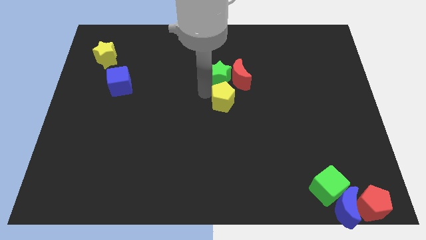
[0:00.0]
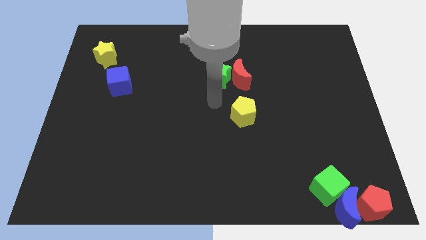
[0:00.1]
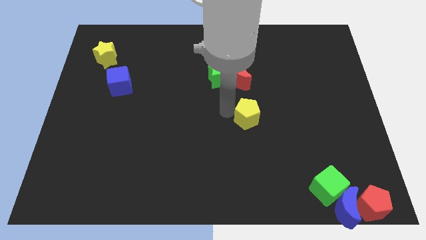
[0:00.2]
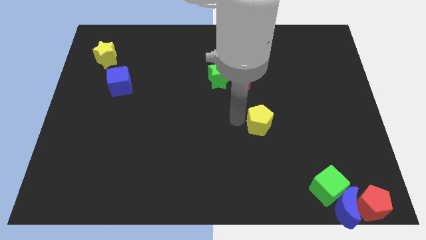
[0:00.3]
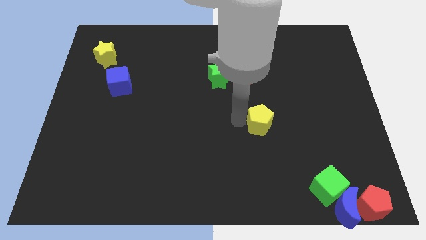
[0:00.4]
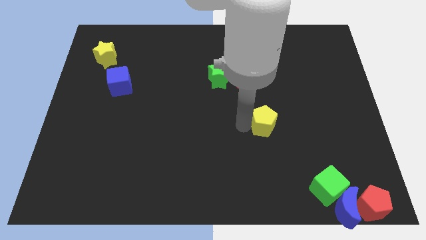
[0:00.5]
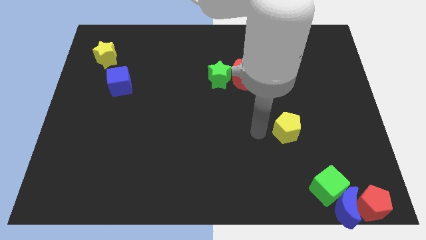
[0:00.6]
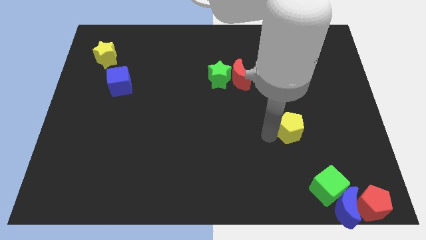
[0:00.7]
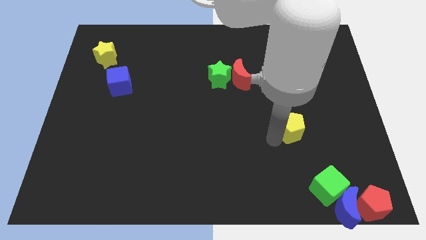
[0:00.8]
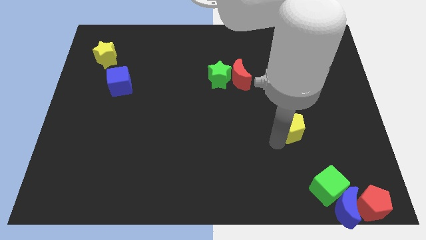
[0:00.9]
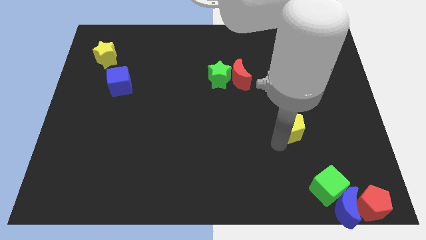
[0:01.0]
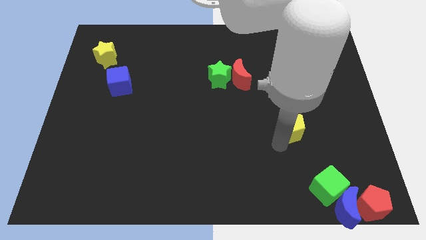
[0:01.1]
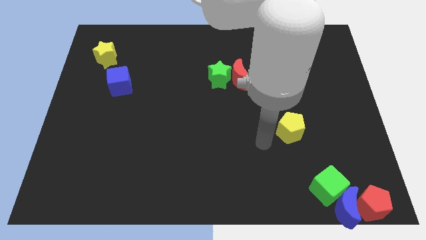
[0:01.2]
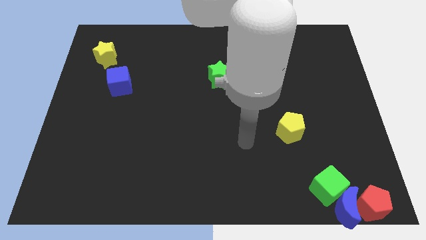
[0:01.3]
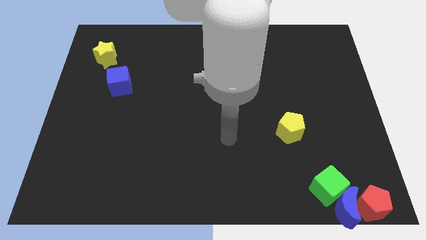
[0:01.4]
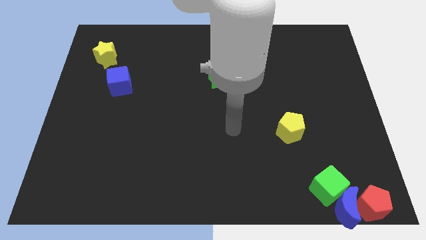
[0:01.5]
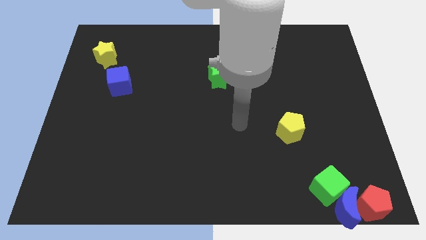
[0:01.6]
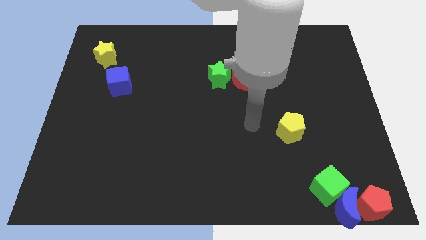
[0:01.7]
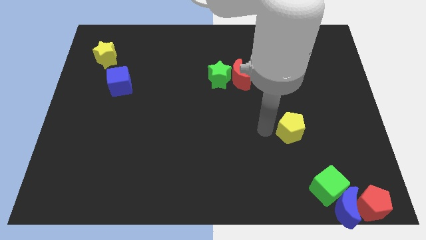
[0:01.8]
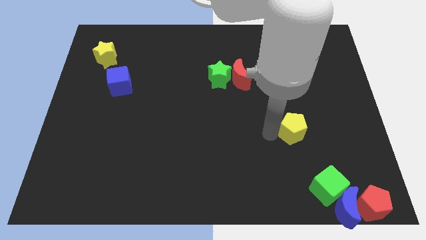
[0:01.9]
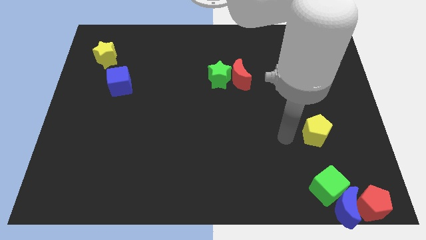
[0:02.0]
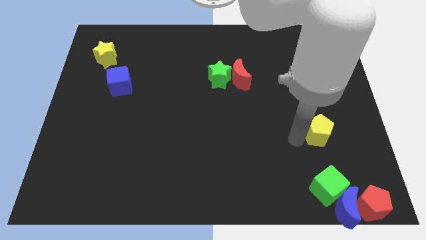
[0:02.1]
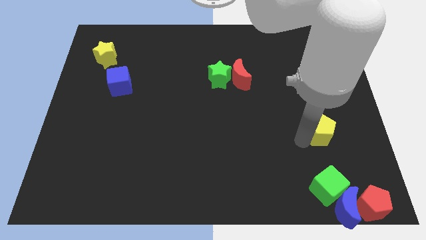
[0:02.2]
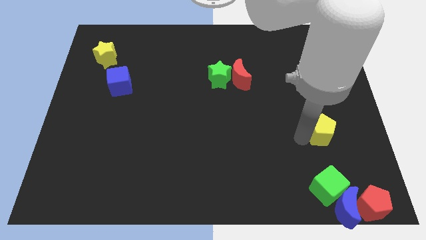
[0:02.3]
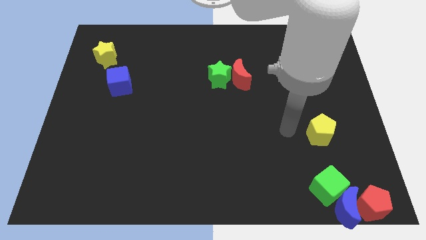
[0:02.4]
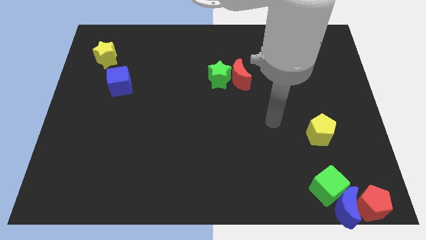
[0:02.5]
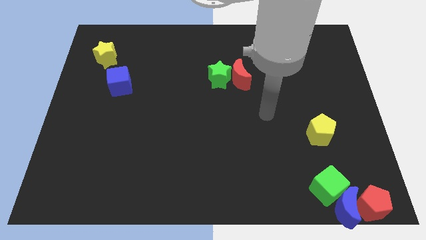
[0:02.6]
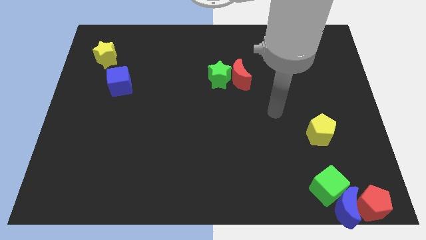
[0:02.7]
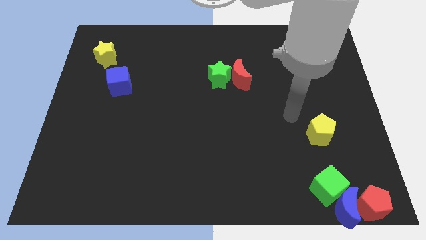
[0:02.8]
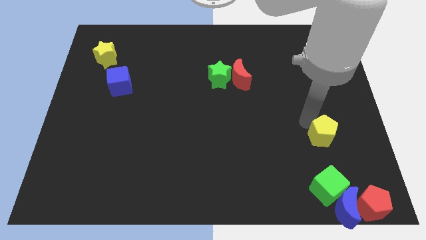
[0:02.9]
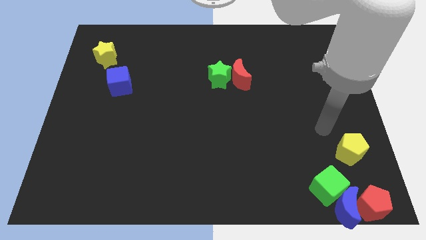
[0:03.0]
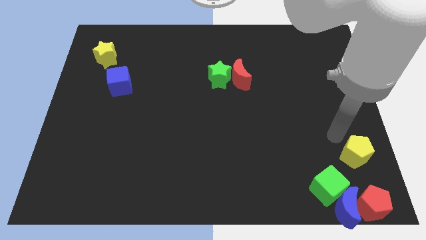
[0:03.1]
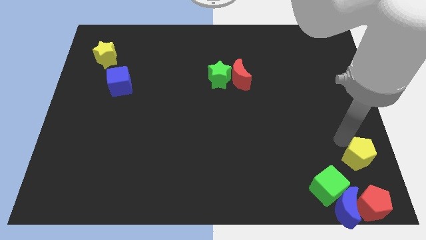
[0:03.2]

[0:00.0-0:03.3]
move the yellow pentagon to the top right of the green cube

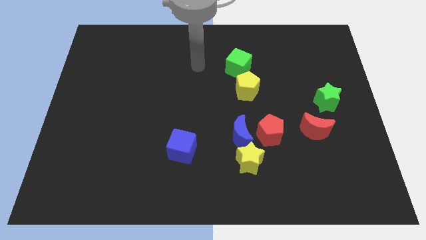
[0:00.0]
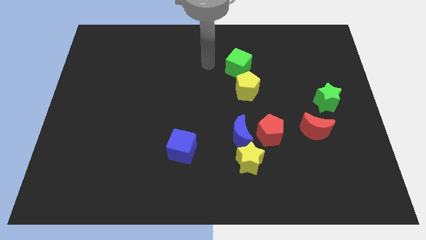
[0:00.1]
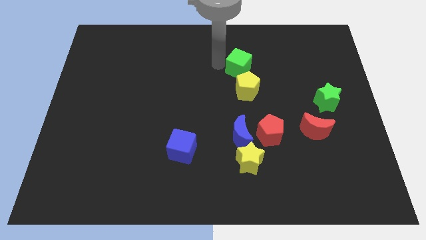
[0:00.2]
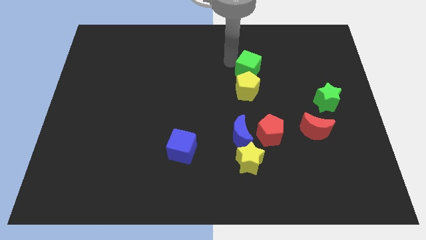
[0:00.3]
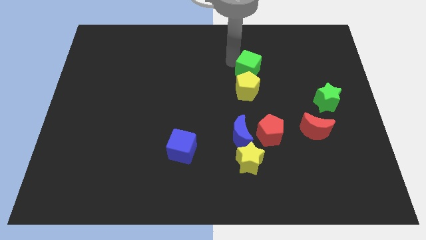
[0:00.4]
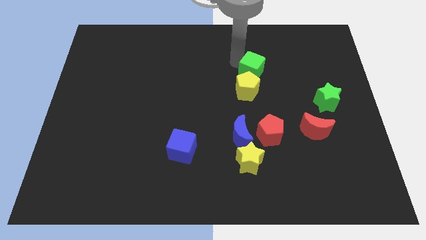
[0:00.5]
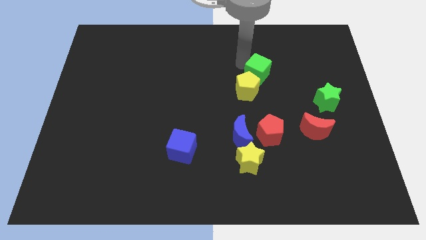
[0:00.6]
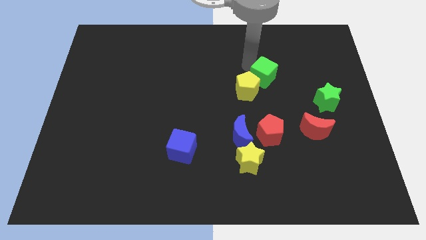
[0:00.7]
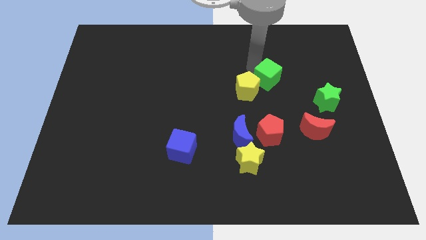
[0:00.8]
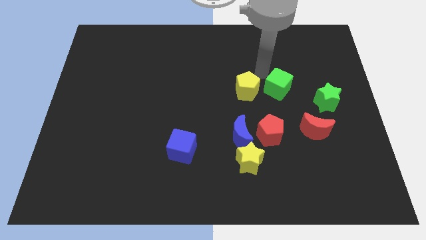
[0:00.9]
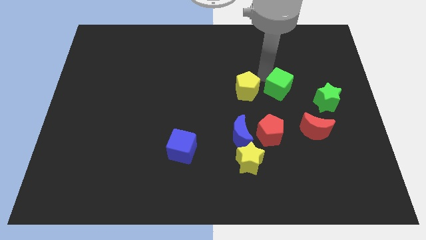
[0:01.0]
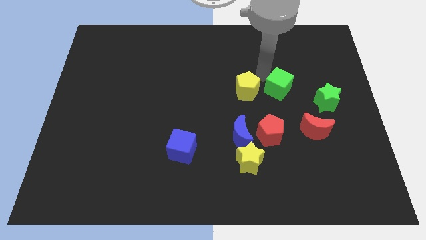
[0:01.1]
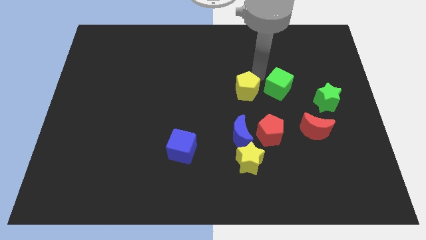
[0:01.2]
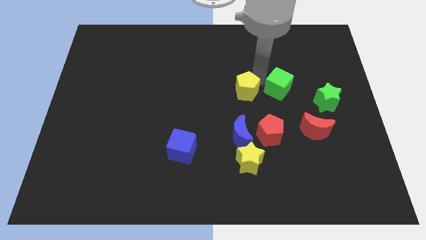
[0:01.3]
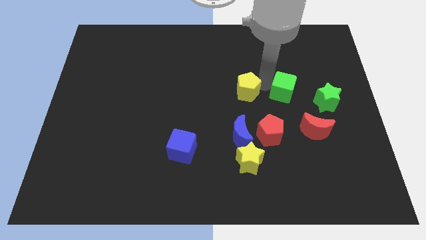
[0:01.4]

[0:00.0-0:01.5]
place the green cube in between the green star and yellow pentagon

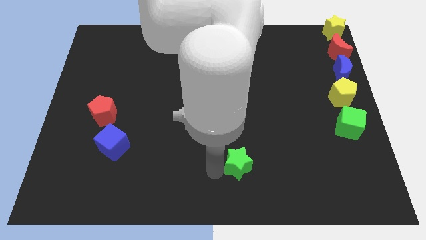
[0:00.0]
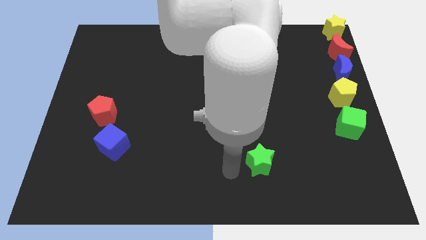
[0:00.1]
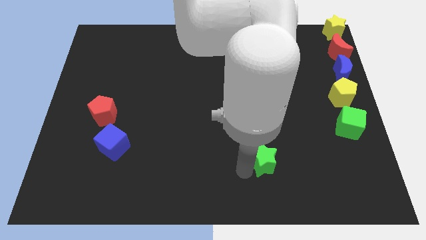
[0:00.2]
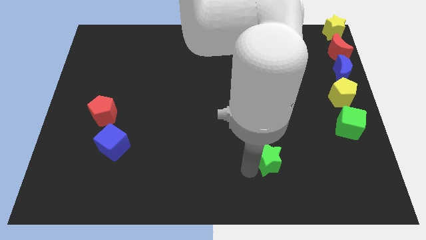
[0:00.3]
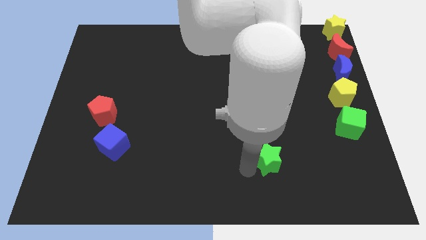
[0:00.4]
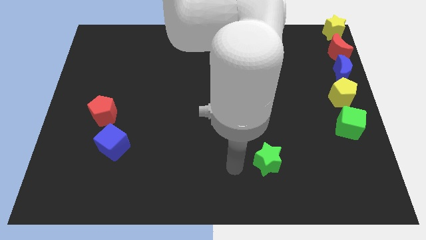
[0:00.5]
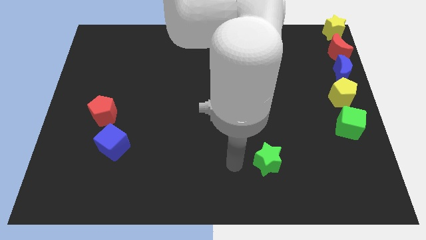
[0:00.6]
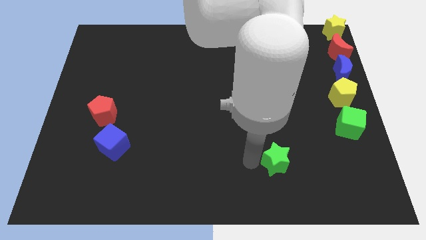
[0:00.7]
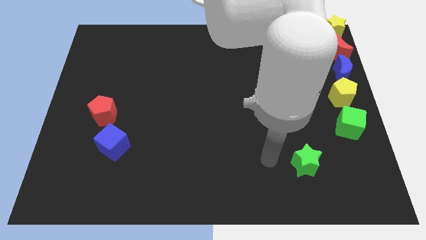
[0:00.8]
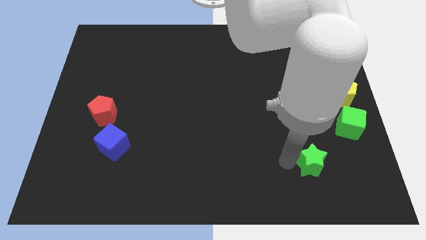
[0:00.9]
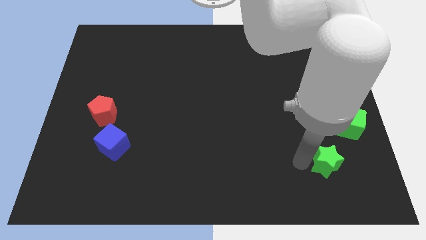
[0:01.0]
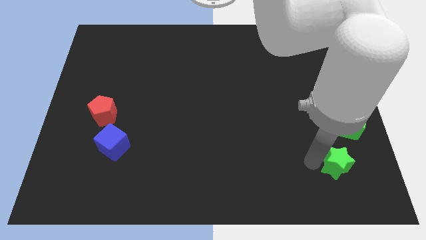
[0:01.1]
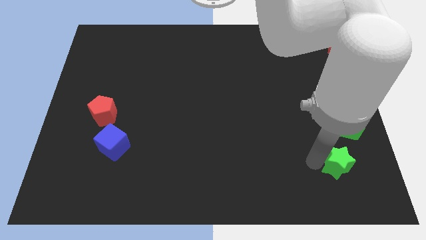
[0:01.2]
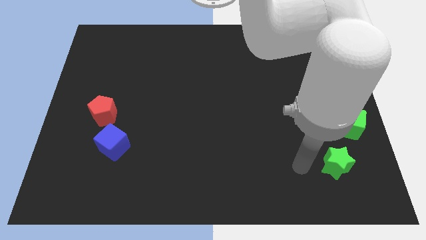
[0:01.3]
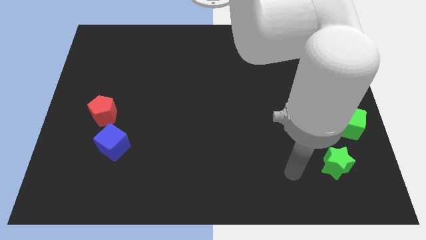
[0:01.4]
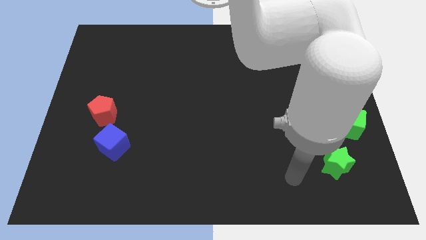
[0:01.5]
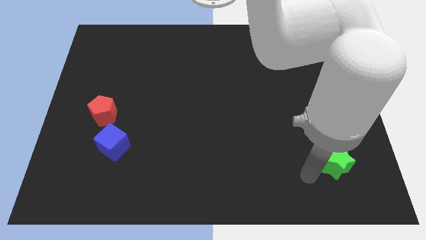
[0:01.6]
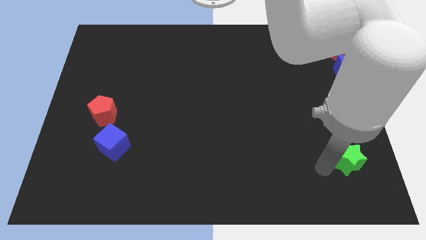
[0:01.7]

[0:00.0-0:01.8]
slide the green star below the green cube

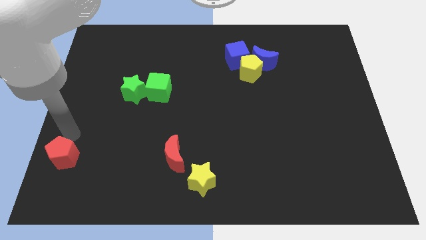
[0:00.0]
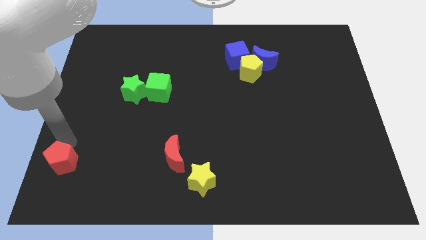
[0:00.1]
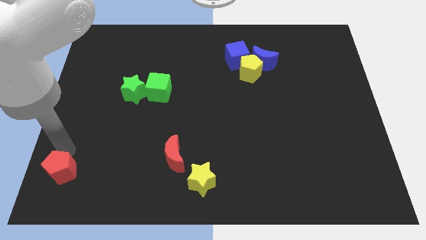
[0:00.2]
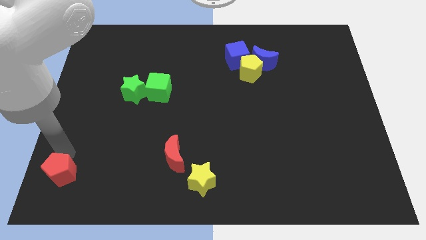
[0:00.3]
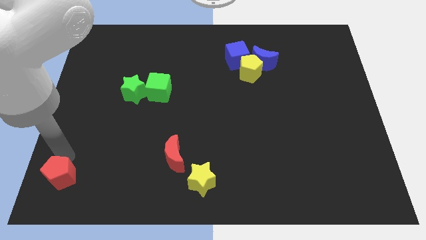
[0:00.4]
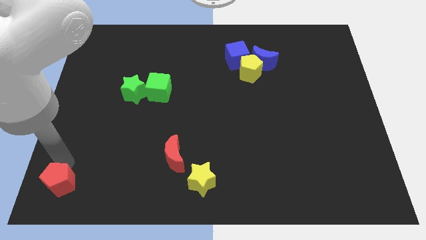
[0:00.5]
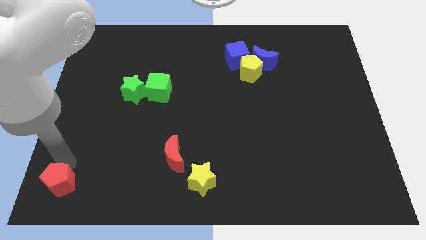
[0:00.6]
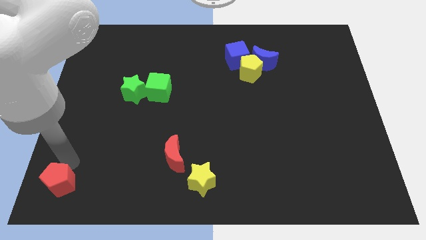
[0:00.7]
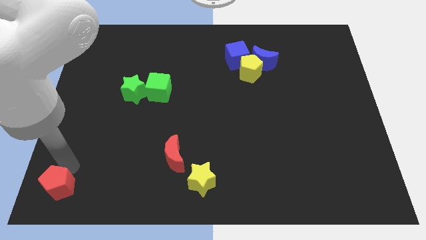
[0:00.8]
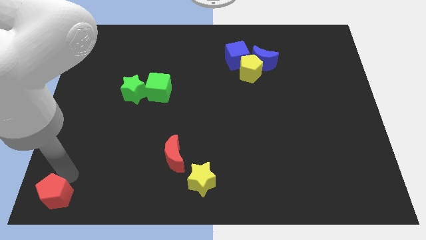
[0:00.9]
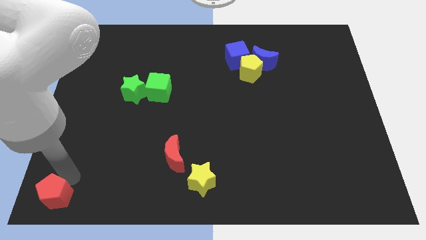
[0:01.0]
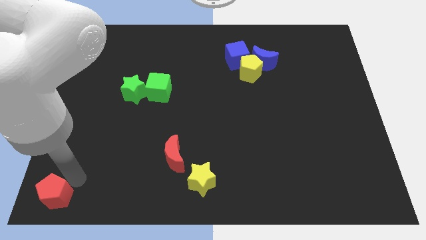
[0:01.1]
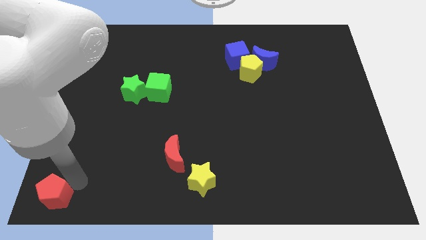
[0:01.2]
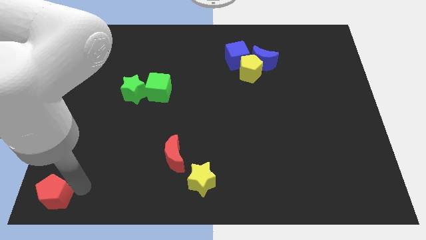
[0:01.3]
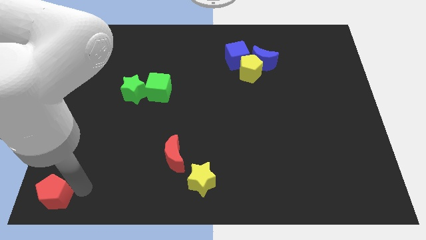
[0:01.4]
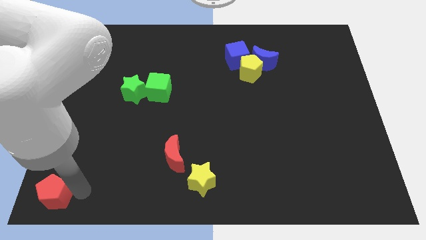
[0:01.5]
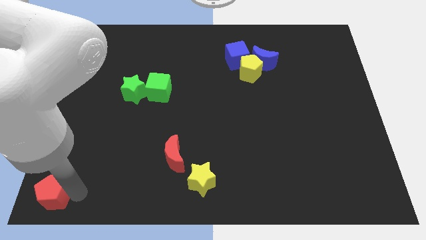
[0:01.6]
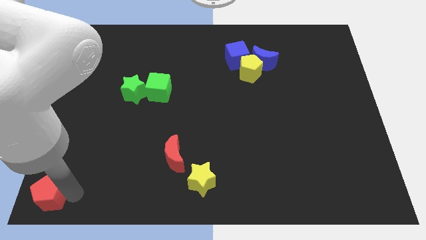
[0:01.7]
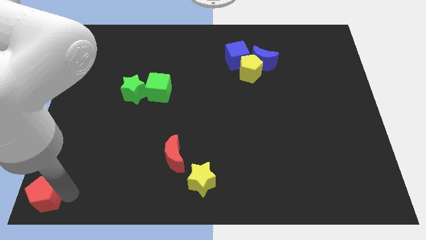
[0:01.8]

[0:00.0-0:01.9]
move the red pentagon to the bottom left corner of the board

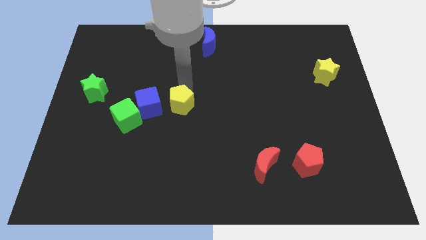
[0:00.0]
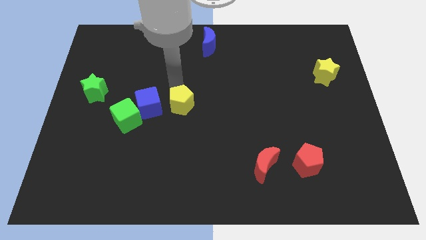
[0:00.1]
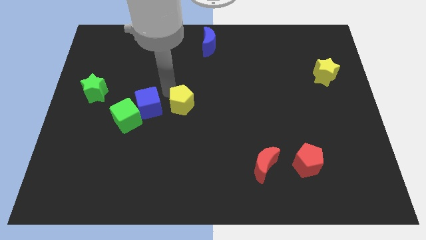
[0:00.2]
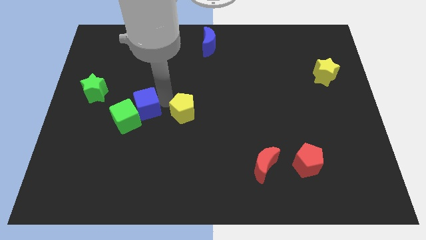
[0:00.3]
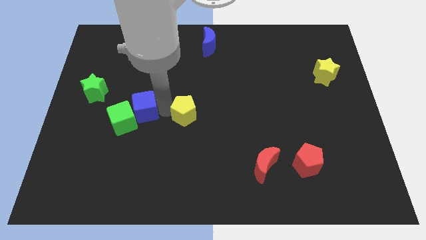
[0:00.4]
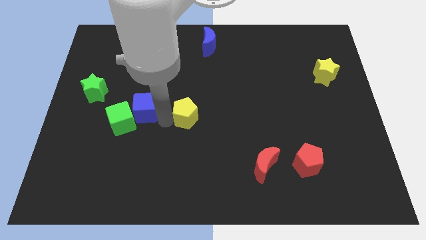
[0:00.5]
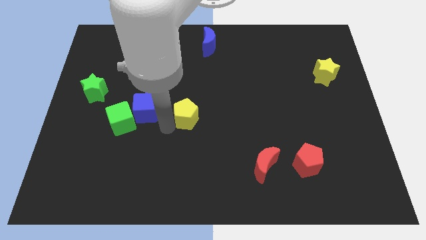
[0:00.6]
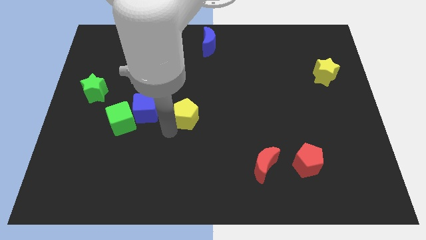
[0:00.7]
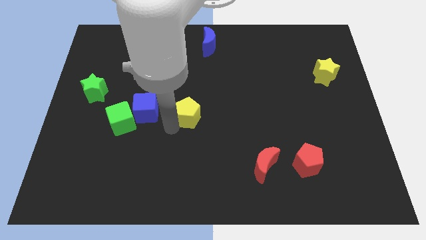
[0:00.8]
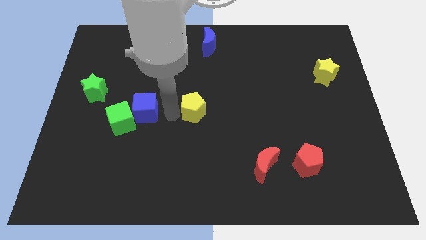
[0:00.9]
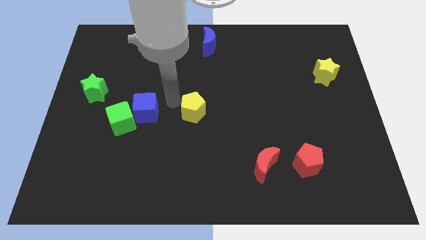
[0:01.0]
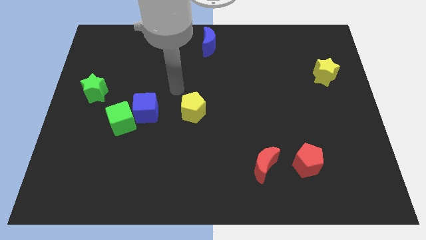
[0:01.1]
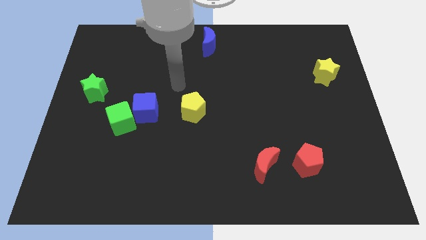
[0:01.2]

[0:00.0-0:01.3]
tap on the left side of the yellow pentagon
